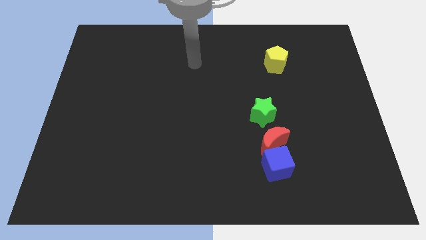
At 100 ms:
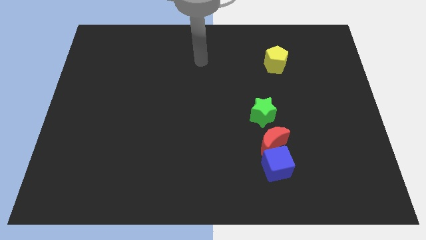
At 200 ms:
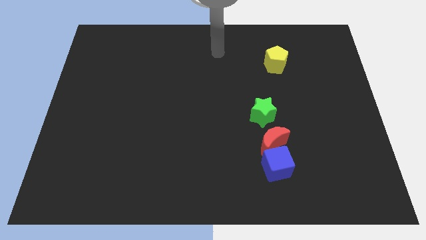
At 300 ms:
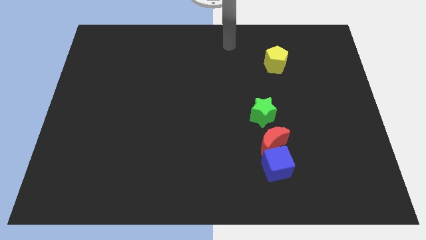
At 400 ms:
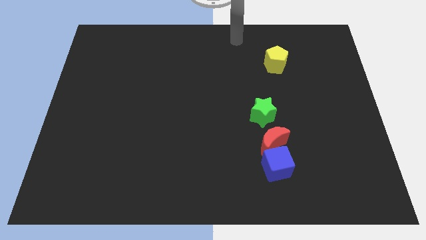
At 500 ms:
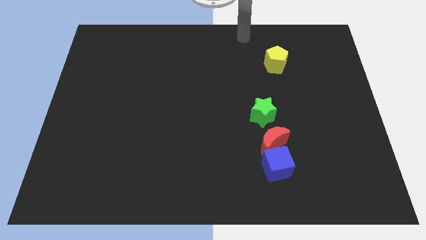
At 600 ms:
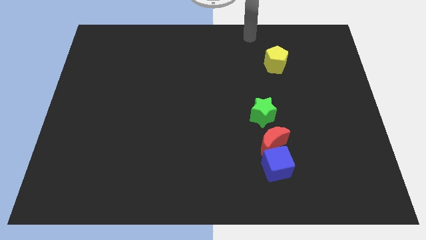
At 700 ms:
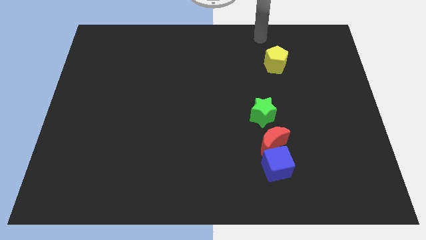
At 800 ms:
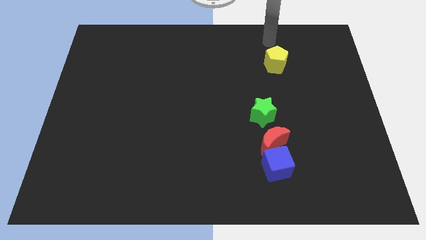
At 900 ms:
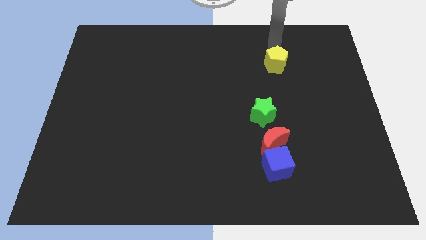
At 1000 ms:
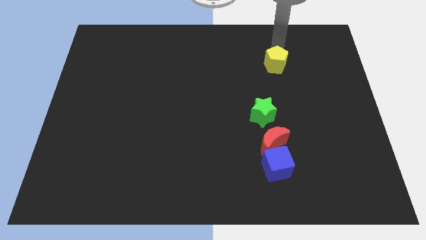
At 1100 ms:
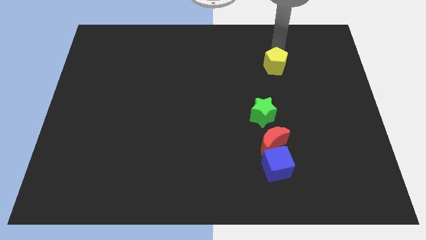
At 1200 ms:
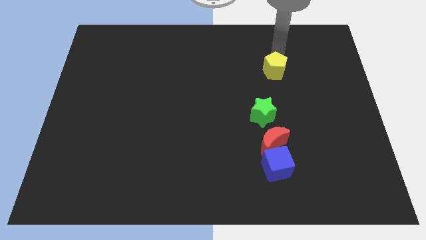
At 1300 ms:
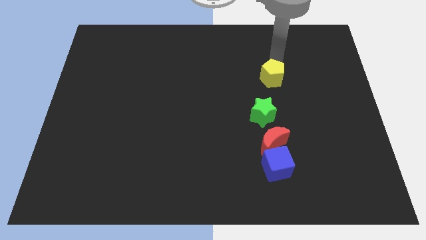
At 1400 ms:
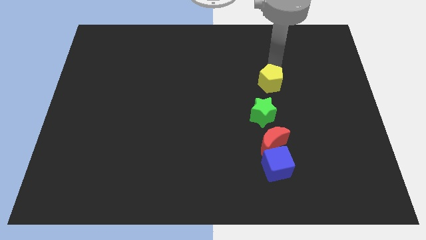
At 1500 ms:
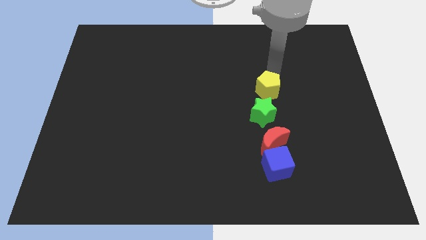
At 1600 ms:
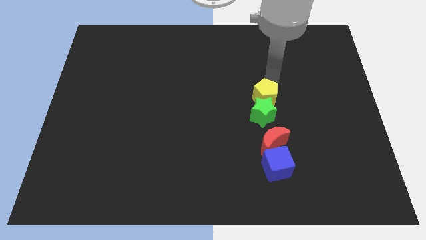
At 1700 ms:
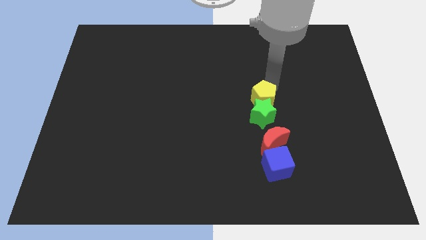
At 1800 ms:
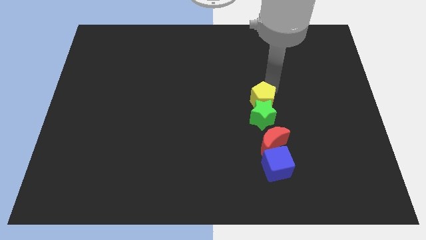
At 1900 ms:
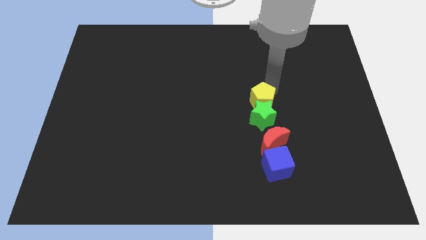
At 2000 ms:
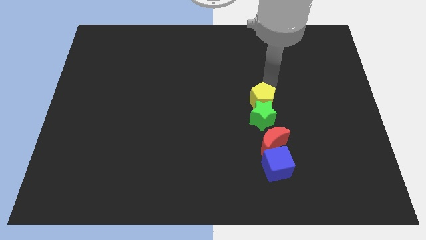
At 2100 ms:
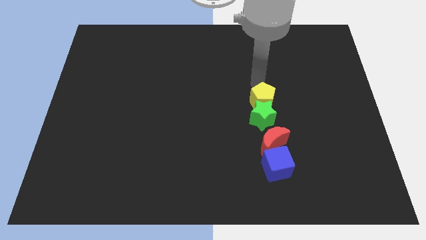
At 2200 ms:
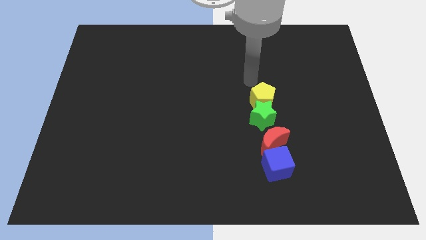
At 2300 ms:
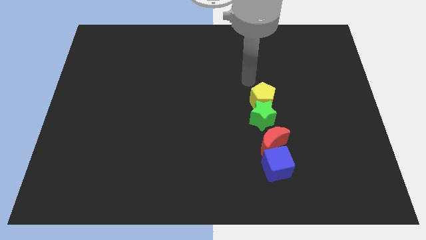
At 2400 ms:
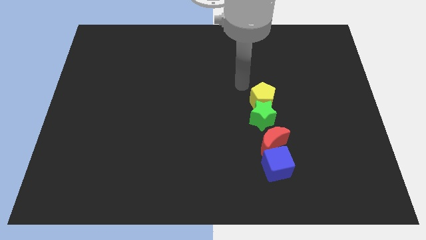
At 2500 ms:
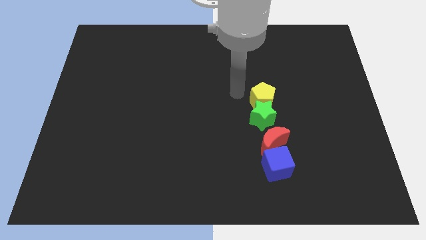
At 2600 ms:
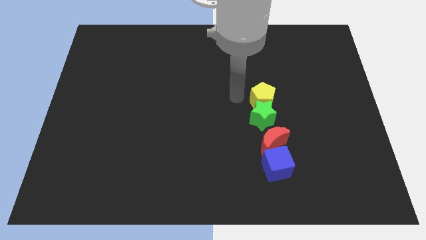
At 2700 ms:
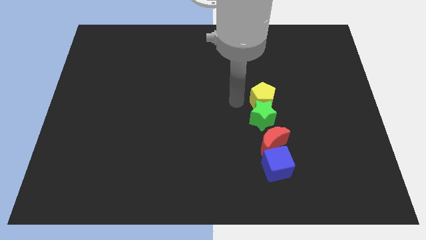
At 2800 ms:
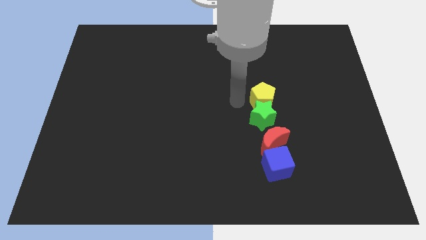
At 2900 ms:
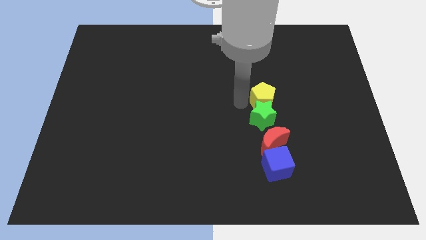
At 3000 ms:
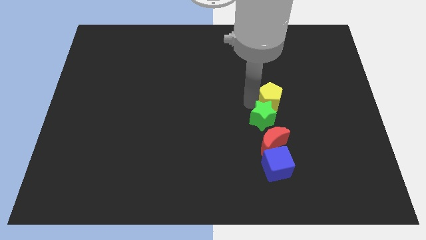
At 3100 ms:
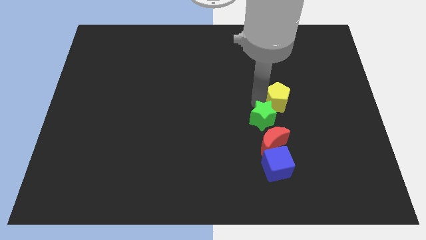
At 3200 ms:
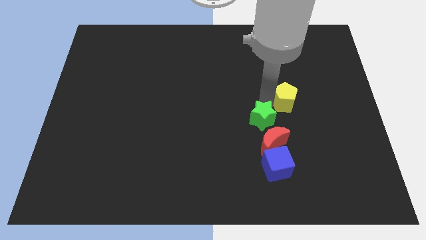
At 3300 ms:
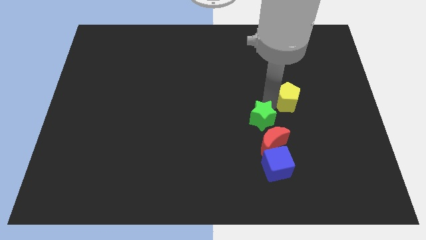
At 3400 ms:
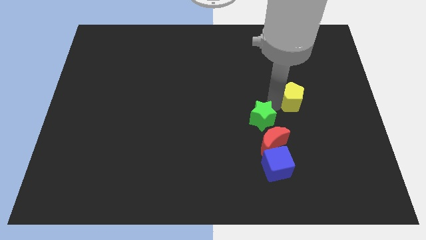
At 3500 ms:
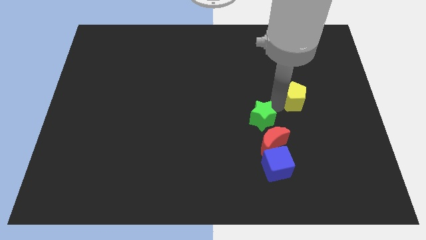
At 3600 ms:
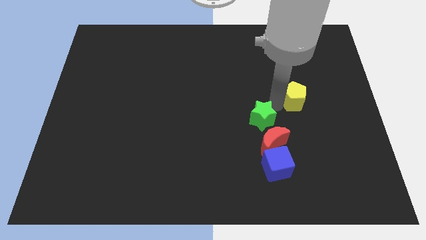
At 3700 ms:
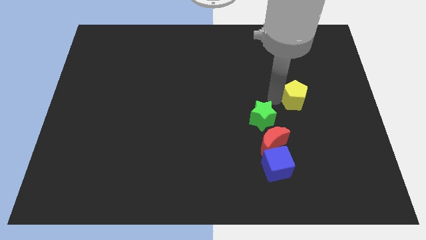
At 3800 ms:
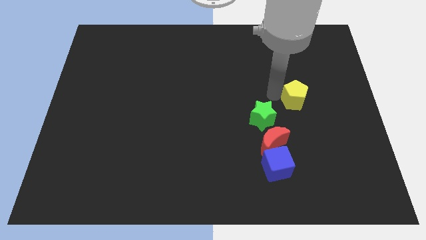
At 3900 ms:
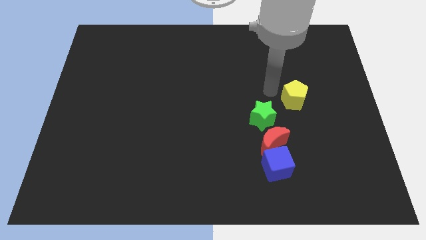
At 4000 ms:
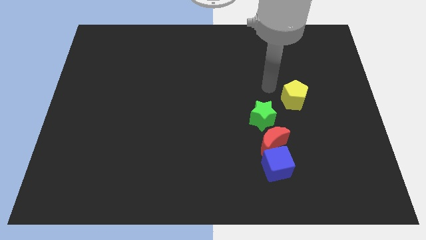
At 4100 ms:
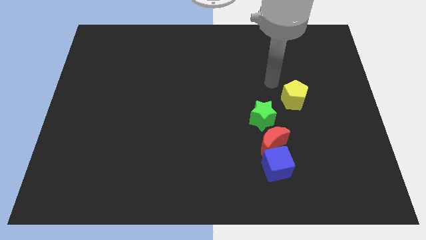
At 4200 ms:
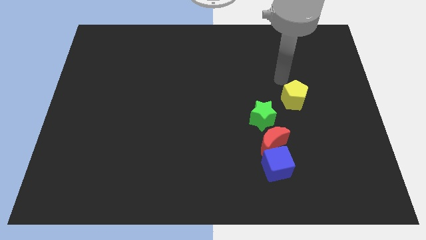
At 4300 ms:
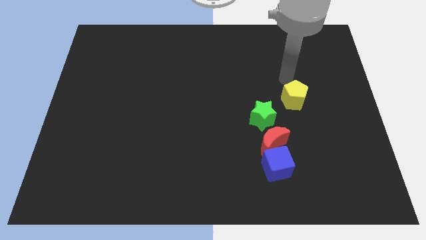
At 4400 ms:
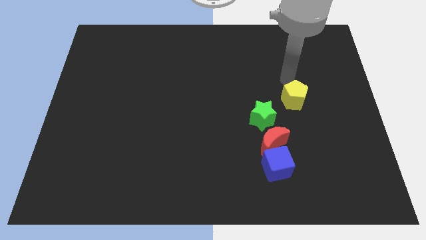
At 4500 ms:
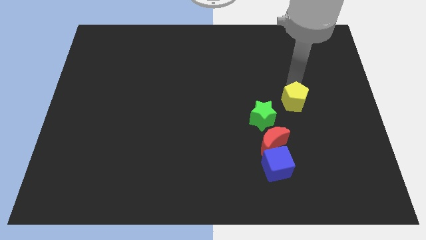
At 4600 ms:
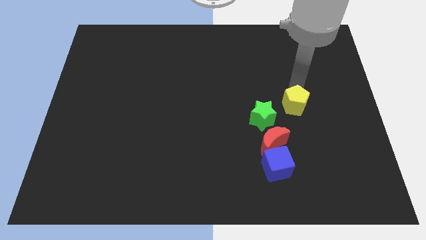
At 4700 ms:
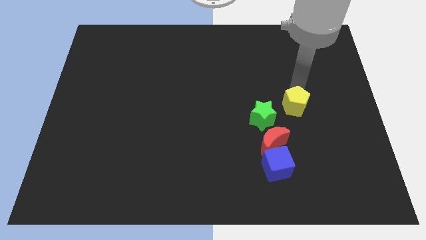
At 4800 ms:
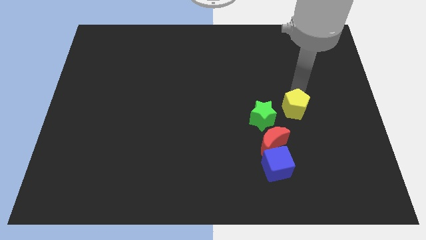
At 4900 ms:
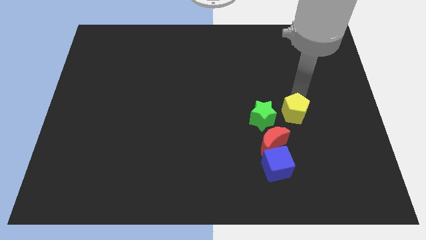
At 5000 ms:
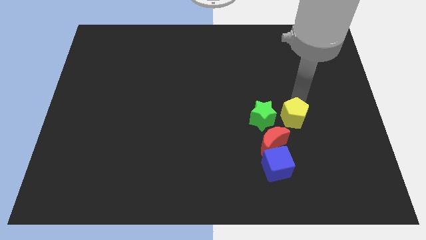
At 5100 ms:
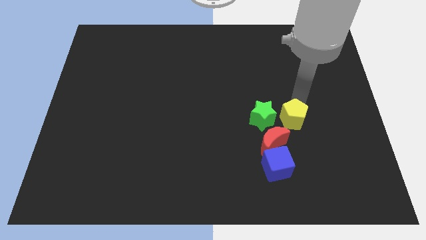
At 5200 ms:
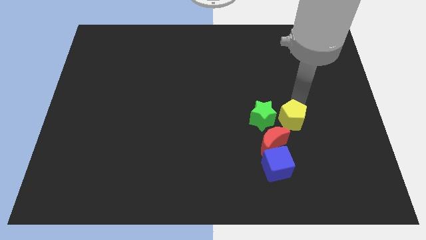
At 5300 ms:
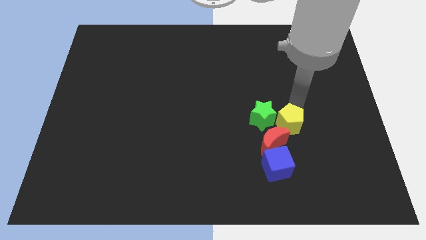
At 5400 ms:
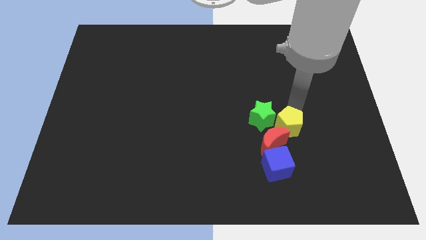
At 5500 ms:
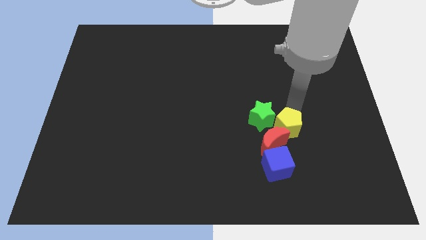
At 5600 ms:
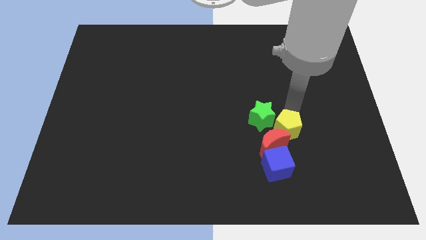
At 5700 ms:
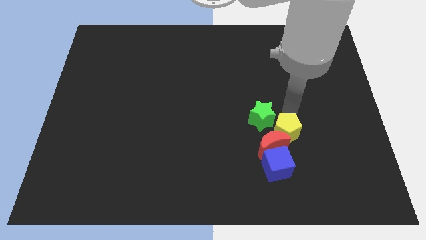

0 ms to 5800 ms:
put the pentagon to the red moon

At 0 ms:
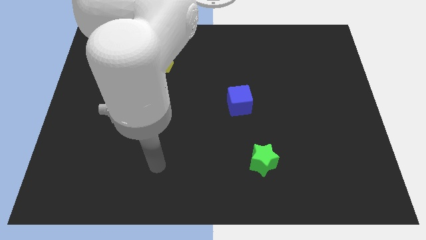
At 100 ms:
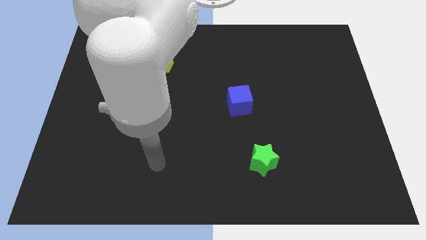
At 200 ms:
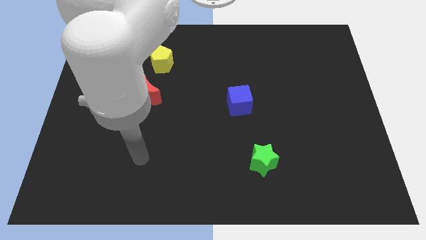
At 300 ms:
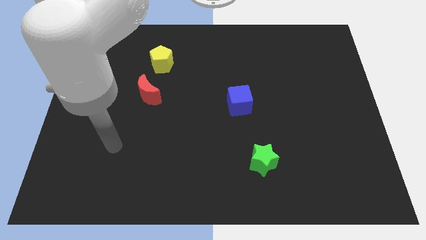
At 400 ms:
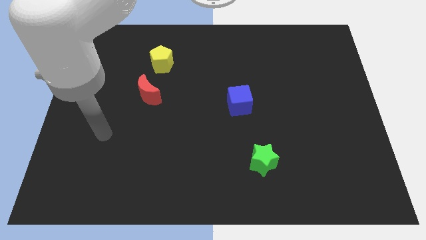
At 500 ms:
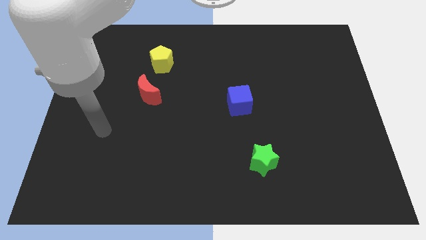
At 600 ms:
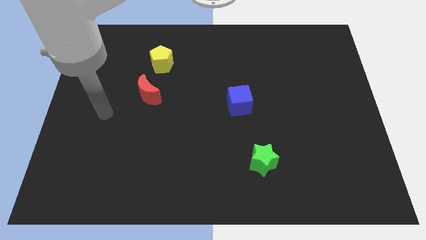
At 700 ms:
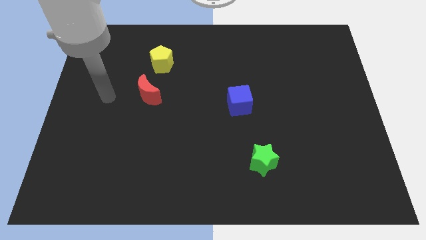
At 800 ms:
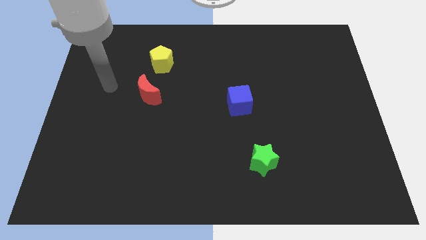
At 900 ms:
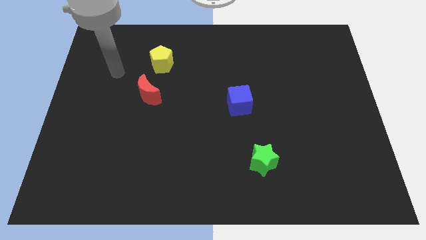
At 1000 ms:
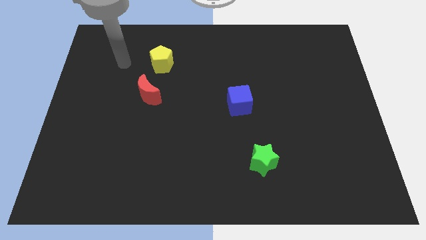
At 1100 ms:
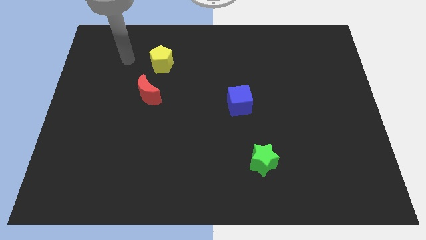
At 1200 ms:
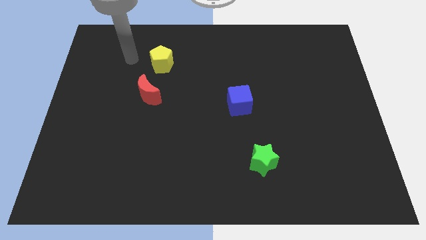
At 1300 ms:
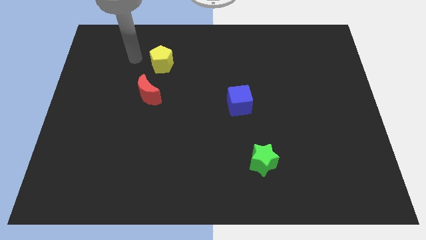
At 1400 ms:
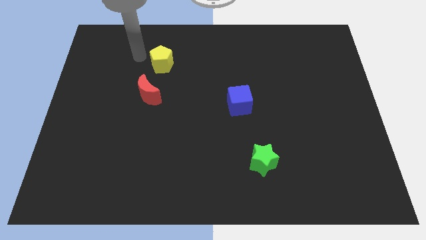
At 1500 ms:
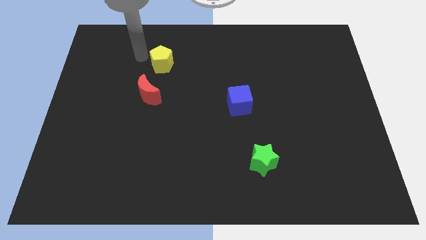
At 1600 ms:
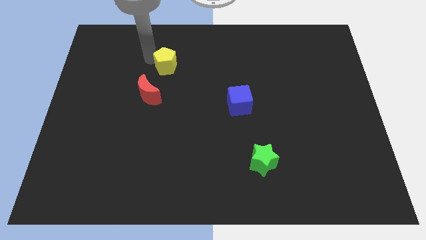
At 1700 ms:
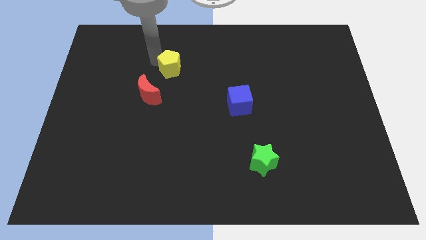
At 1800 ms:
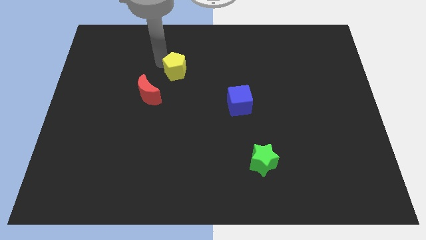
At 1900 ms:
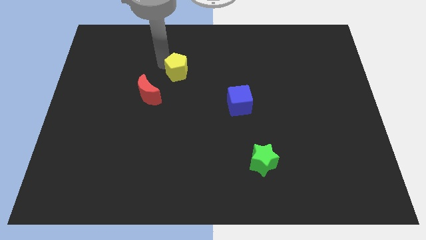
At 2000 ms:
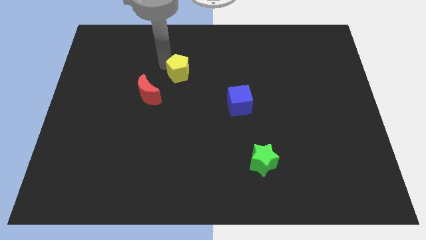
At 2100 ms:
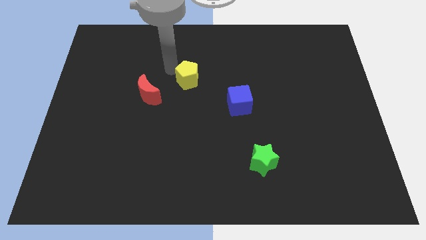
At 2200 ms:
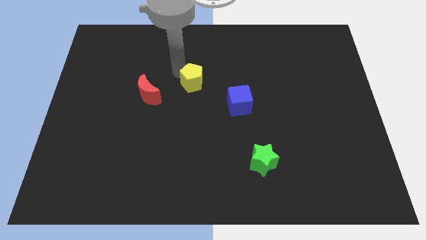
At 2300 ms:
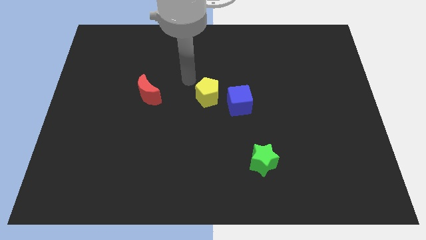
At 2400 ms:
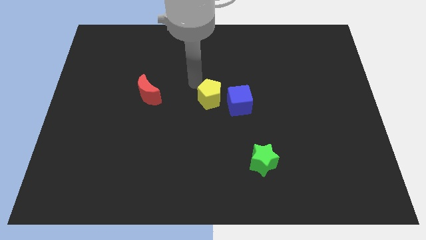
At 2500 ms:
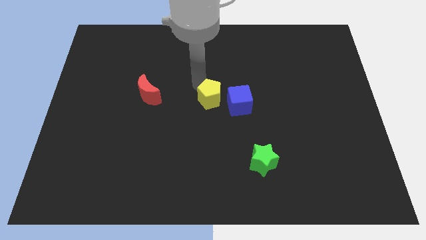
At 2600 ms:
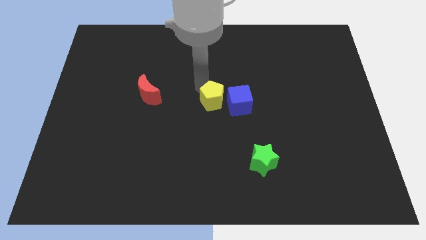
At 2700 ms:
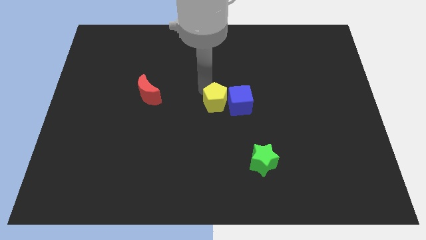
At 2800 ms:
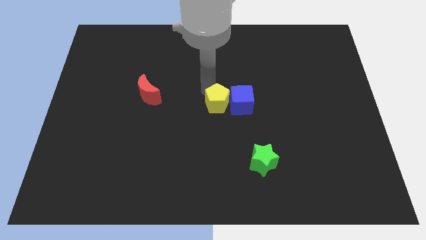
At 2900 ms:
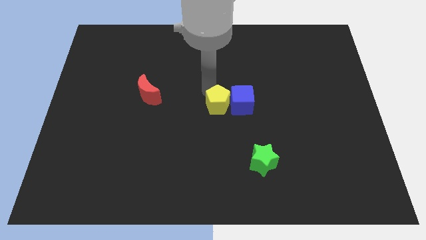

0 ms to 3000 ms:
slide the yellow pentagon next to the blue cube
